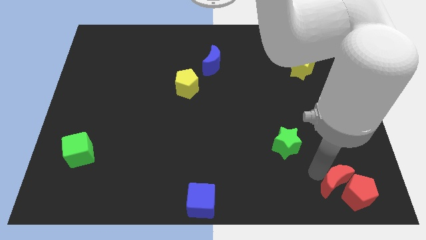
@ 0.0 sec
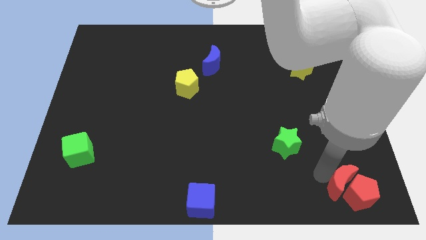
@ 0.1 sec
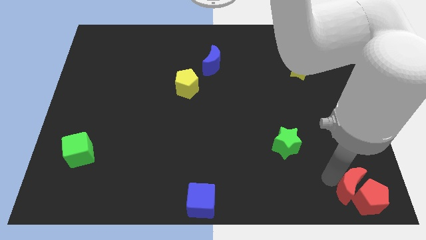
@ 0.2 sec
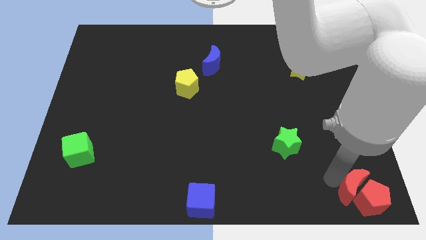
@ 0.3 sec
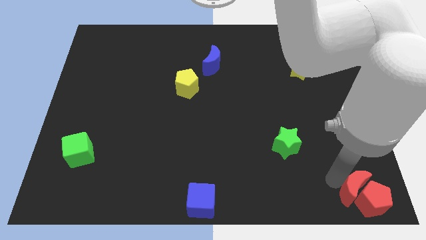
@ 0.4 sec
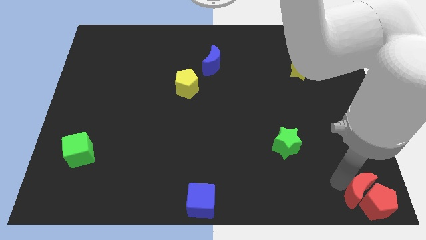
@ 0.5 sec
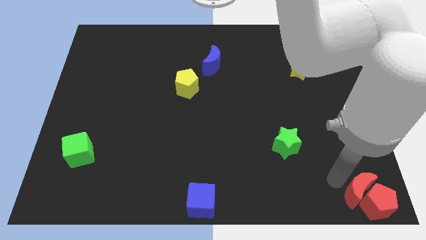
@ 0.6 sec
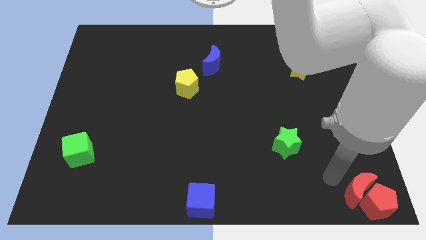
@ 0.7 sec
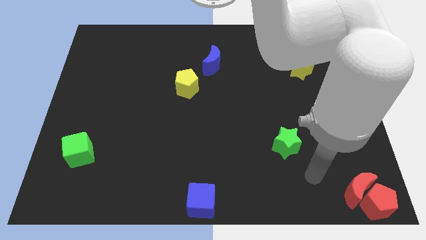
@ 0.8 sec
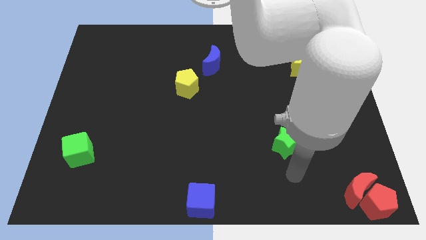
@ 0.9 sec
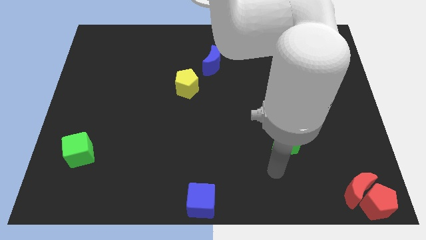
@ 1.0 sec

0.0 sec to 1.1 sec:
push the red blocks towards the bottom right side of the board

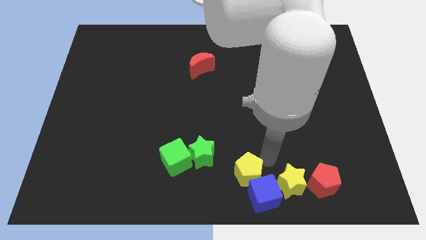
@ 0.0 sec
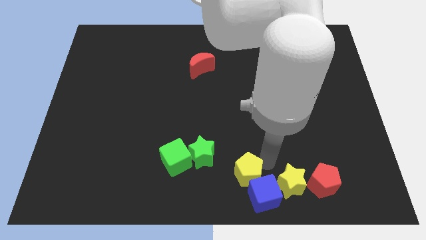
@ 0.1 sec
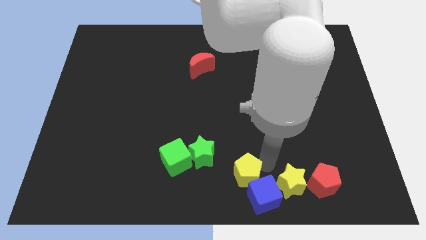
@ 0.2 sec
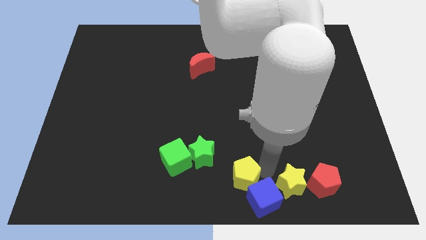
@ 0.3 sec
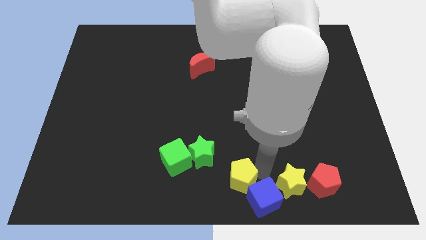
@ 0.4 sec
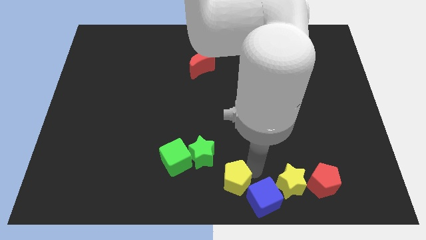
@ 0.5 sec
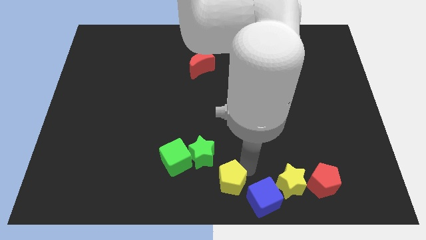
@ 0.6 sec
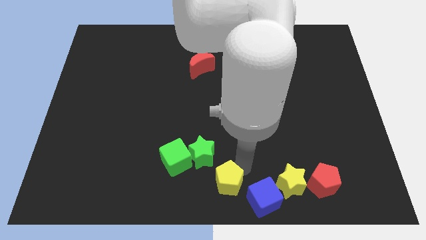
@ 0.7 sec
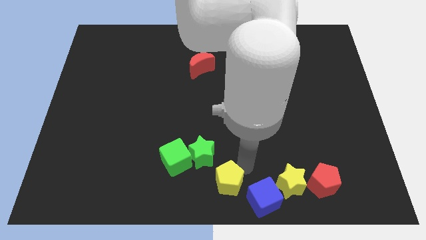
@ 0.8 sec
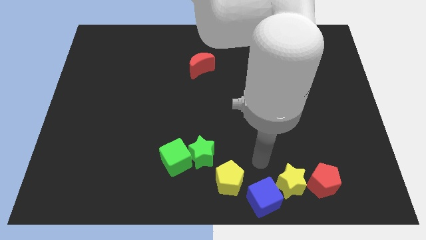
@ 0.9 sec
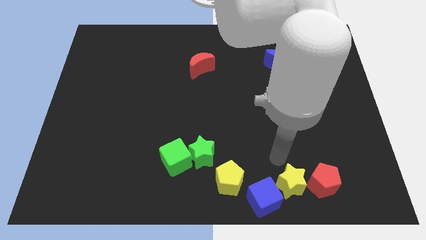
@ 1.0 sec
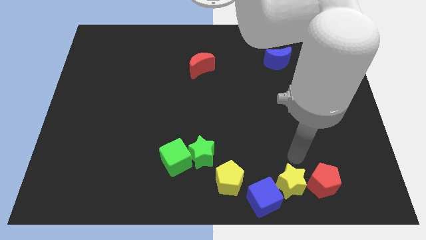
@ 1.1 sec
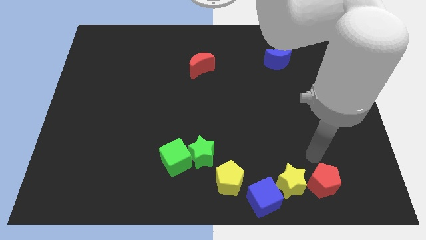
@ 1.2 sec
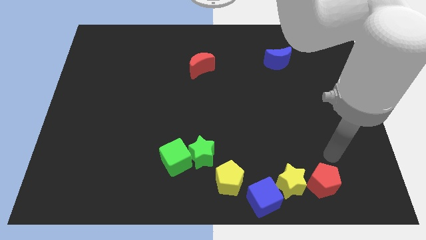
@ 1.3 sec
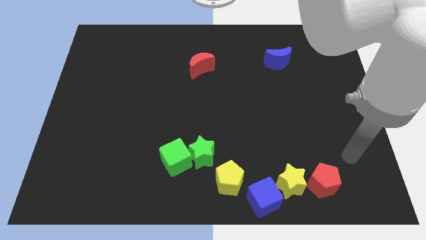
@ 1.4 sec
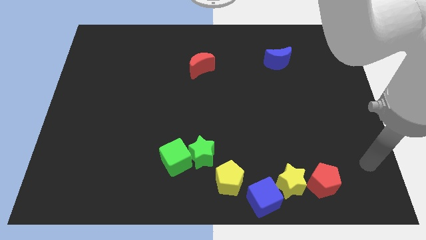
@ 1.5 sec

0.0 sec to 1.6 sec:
separate the yellow pentagon from blue cube

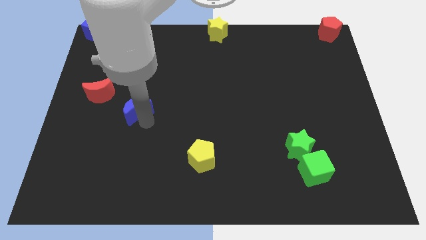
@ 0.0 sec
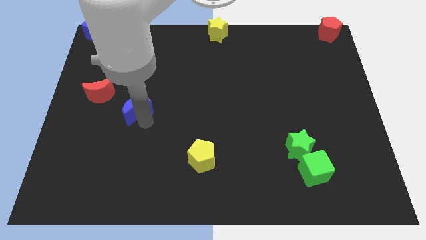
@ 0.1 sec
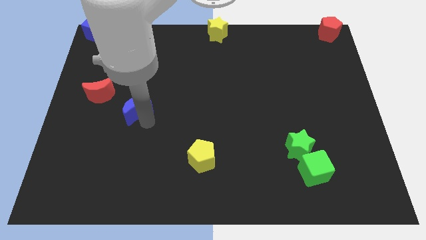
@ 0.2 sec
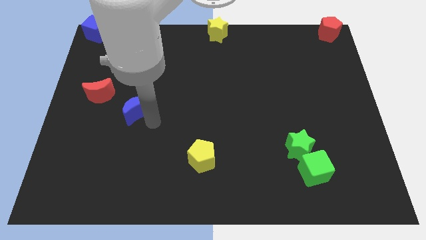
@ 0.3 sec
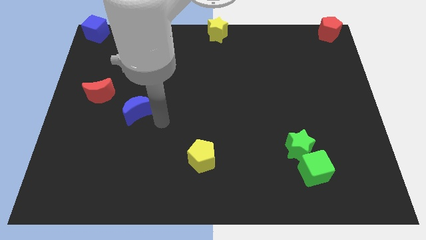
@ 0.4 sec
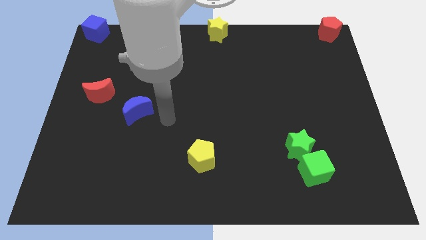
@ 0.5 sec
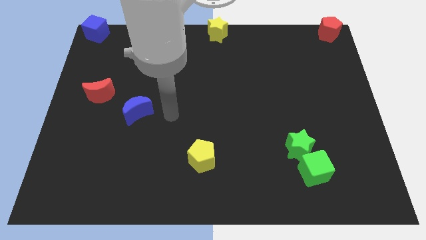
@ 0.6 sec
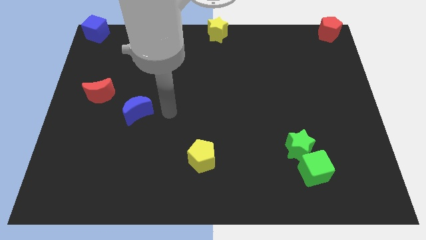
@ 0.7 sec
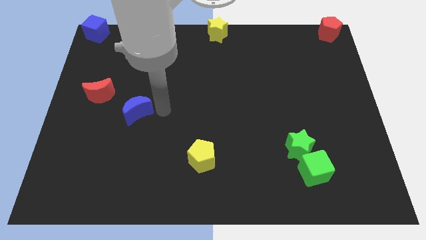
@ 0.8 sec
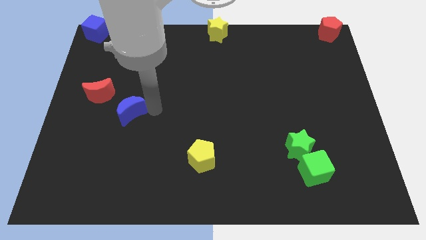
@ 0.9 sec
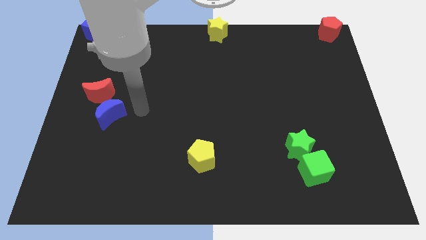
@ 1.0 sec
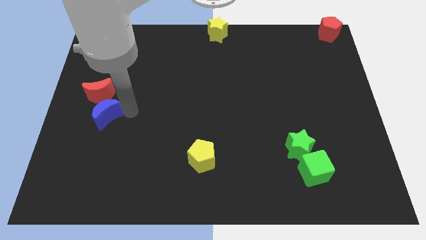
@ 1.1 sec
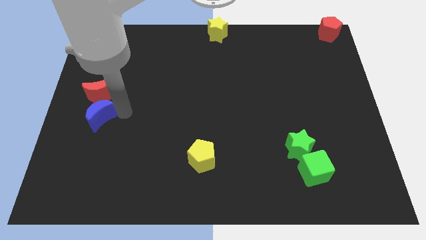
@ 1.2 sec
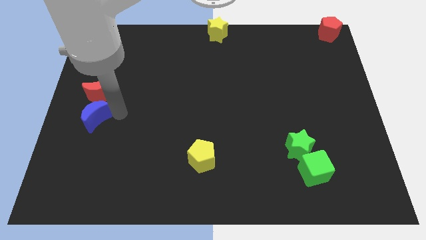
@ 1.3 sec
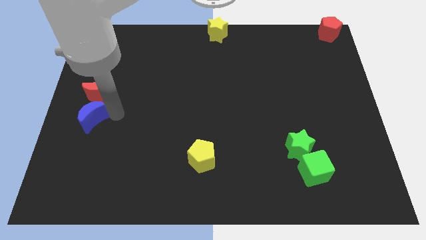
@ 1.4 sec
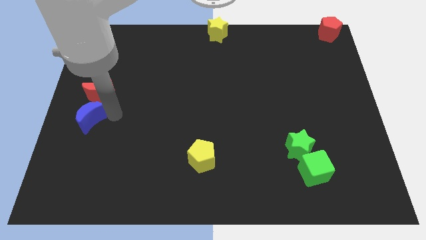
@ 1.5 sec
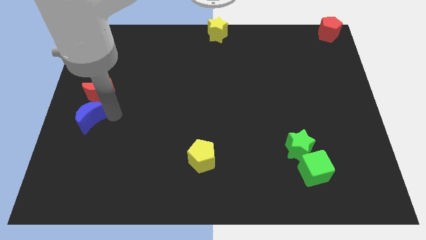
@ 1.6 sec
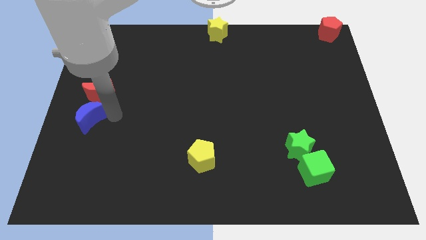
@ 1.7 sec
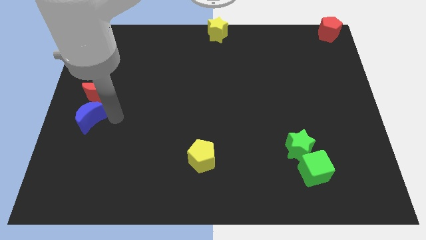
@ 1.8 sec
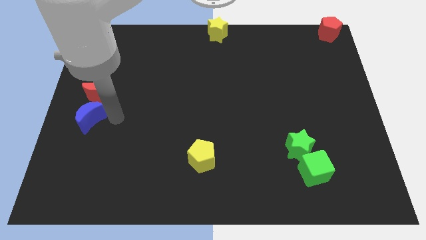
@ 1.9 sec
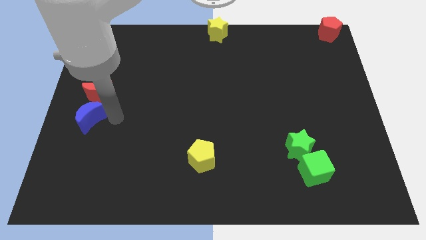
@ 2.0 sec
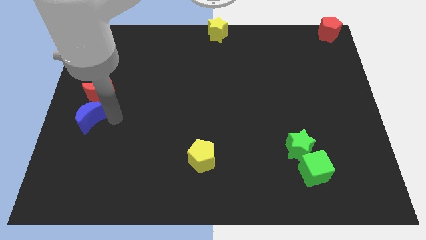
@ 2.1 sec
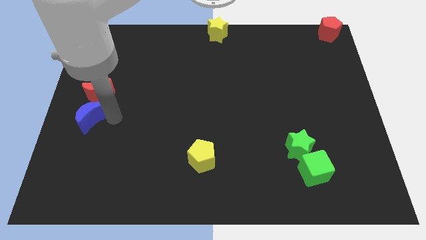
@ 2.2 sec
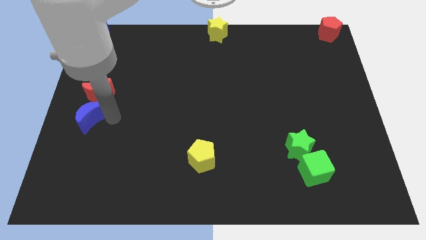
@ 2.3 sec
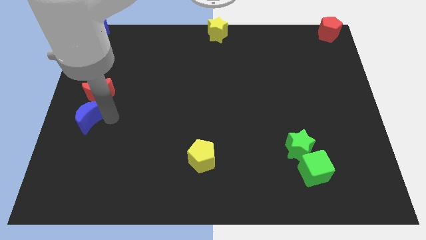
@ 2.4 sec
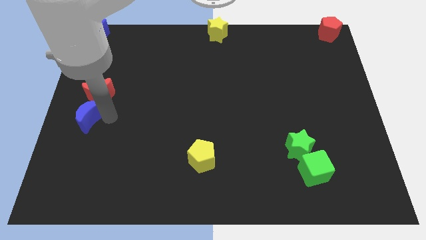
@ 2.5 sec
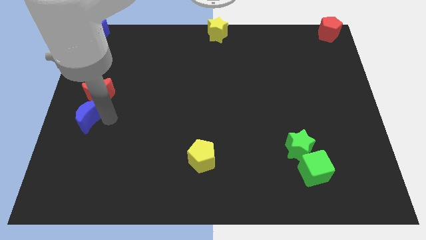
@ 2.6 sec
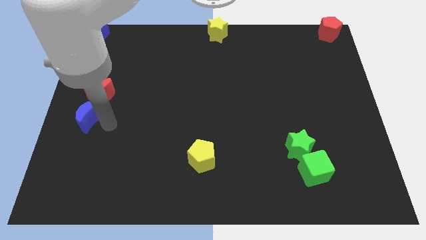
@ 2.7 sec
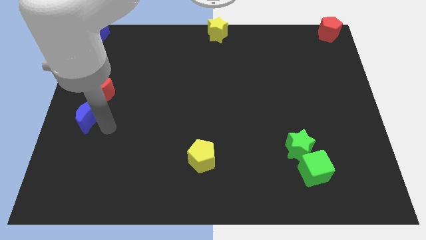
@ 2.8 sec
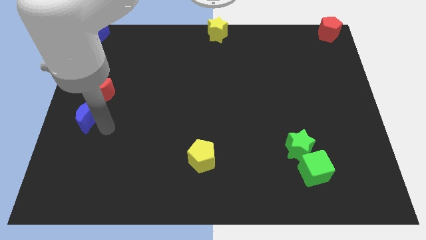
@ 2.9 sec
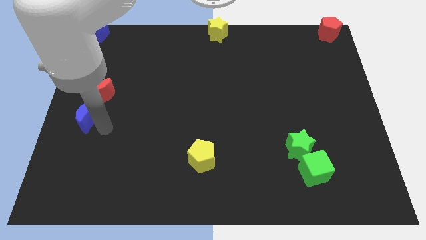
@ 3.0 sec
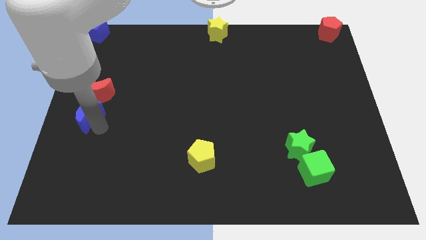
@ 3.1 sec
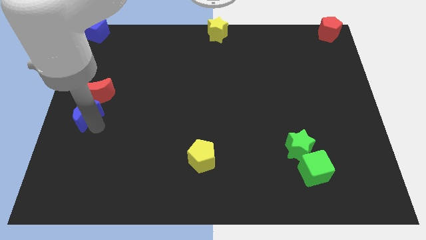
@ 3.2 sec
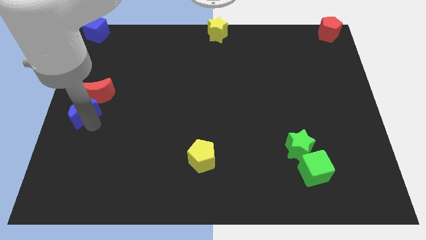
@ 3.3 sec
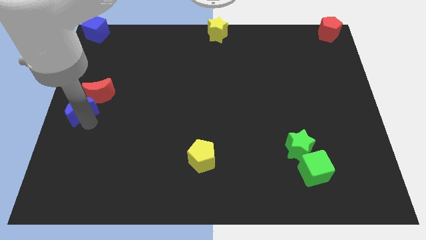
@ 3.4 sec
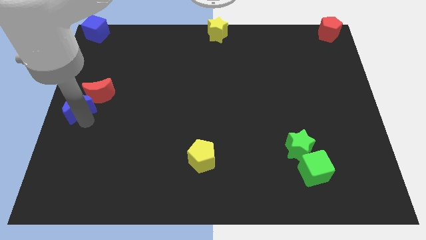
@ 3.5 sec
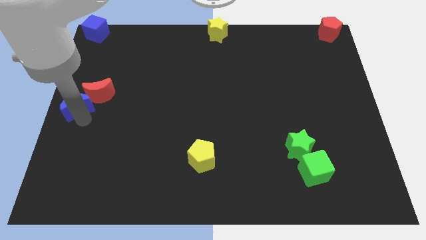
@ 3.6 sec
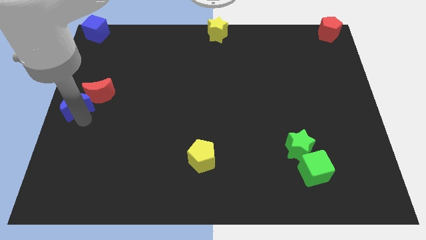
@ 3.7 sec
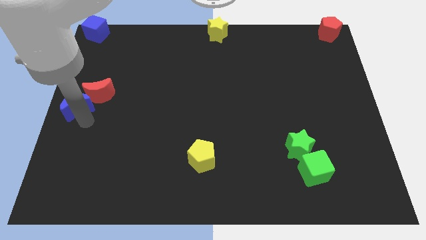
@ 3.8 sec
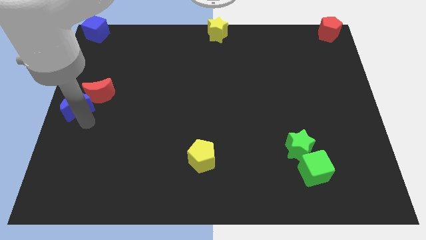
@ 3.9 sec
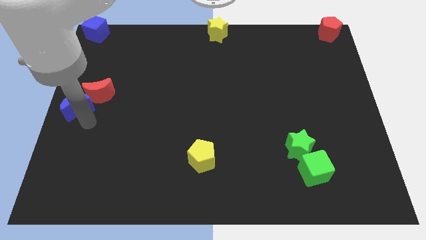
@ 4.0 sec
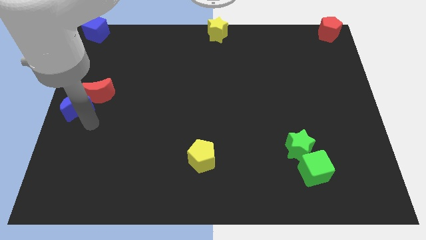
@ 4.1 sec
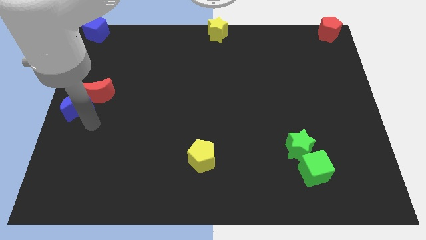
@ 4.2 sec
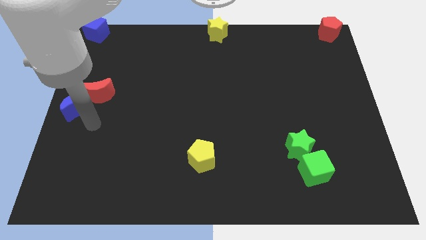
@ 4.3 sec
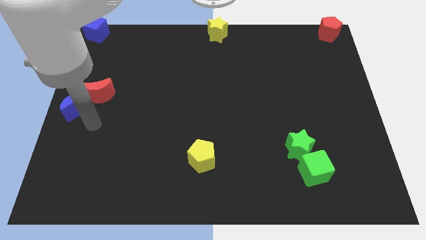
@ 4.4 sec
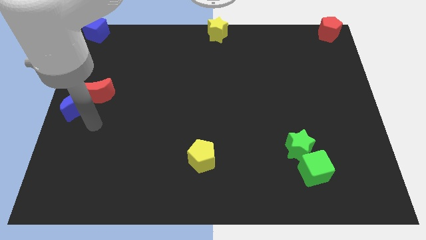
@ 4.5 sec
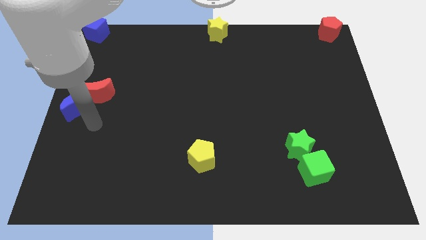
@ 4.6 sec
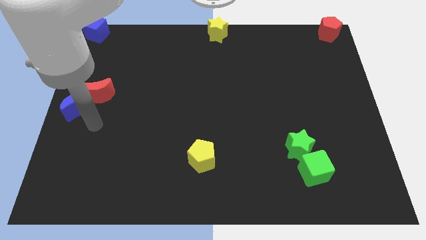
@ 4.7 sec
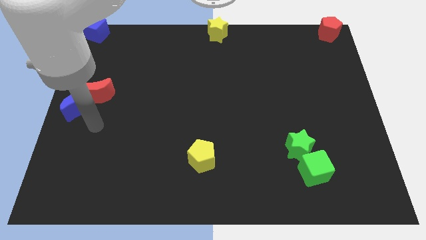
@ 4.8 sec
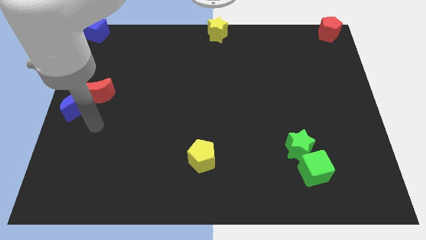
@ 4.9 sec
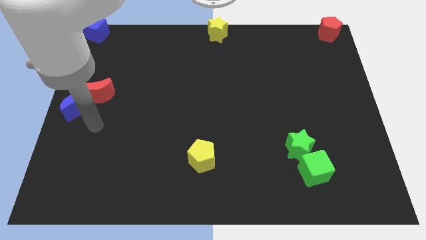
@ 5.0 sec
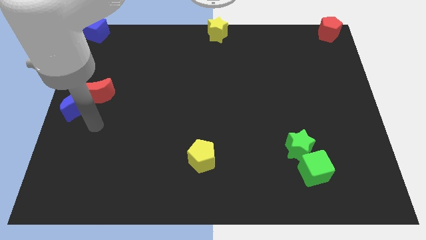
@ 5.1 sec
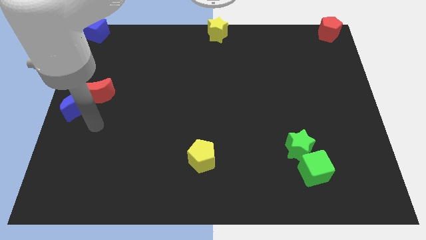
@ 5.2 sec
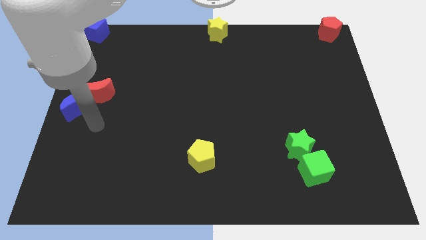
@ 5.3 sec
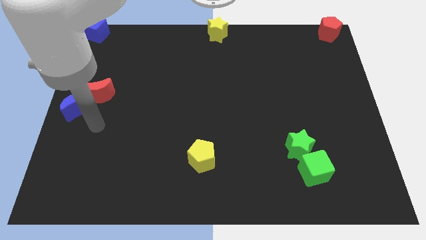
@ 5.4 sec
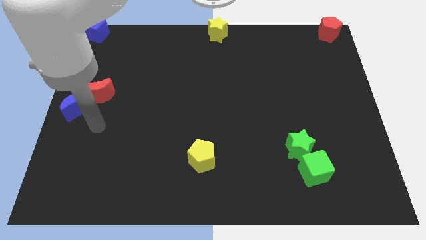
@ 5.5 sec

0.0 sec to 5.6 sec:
place the blue moon to the centre left of the board

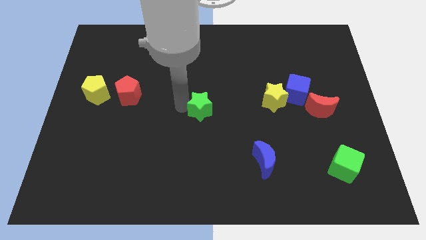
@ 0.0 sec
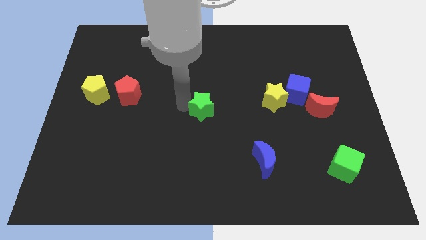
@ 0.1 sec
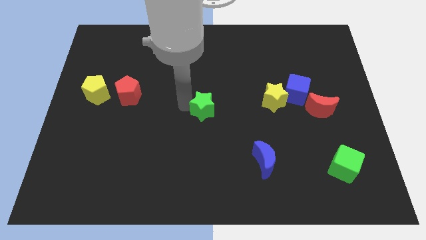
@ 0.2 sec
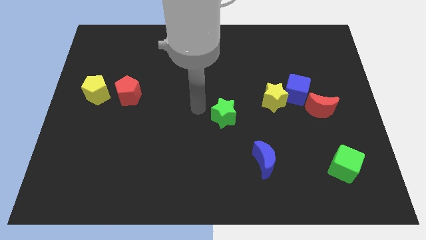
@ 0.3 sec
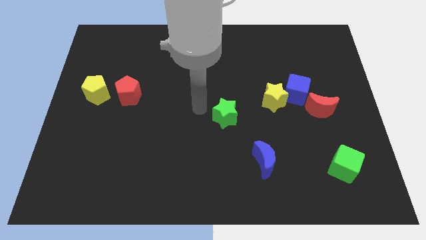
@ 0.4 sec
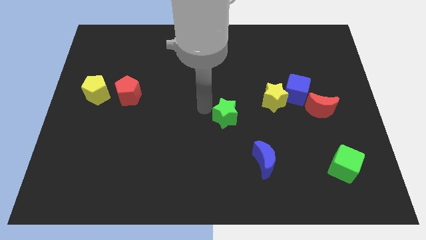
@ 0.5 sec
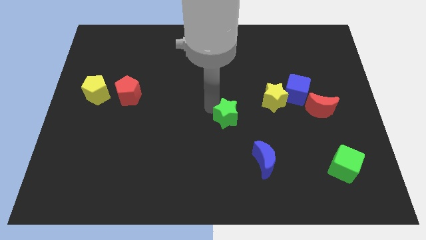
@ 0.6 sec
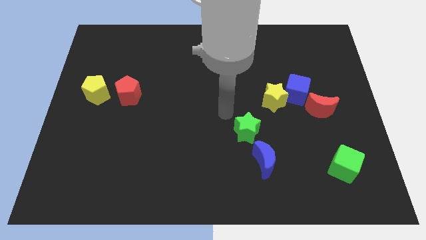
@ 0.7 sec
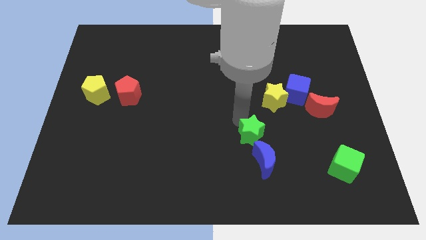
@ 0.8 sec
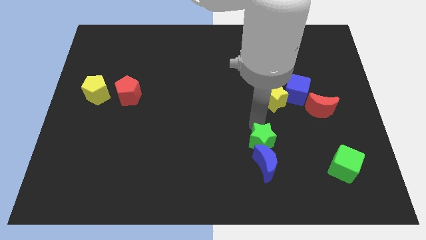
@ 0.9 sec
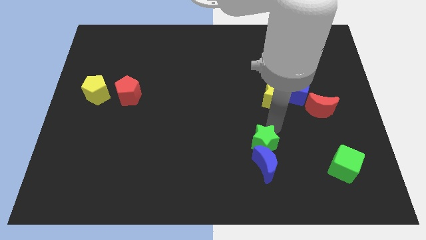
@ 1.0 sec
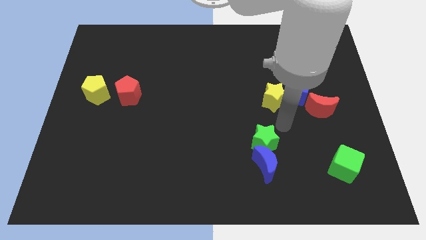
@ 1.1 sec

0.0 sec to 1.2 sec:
place the green star on top of the blue crescent
